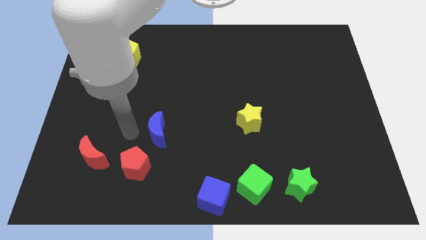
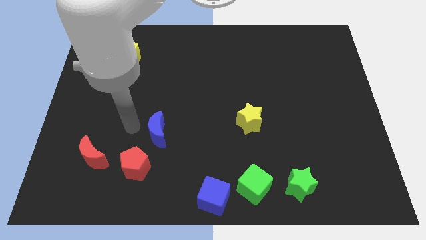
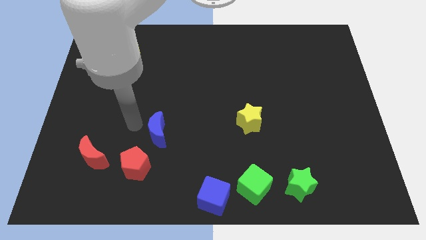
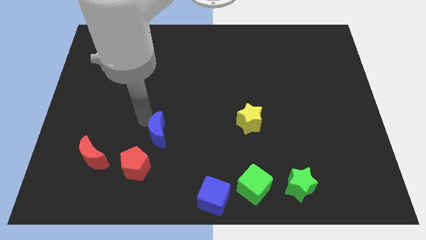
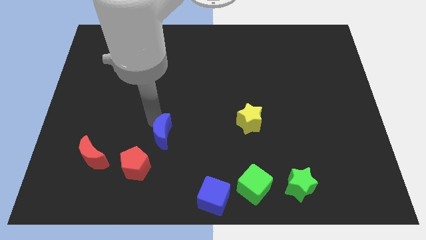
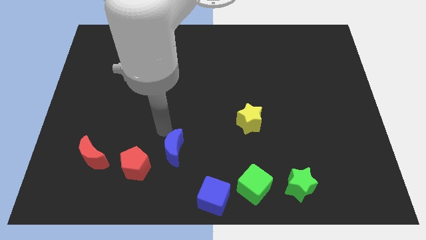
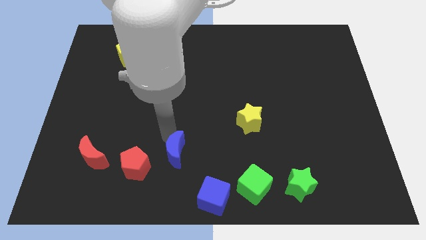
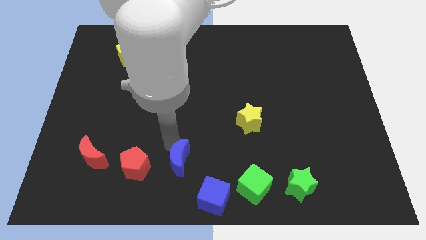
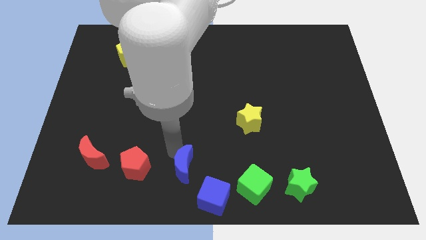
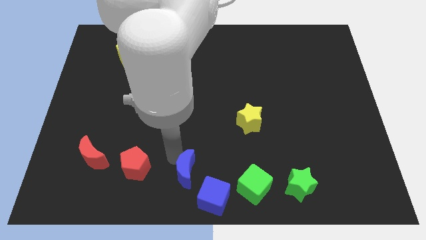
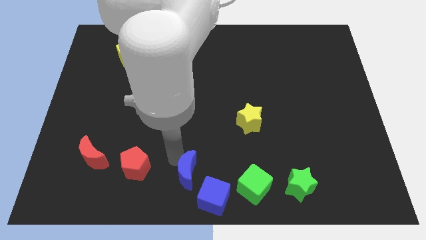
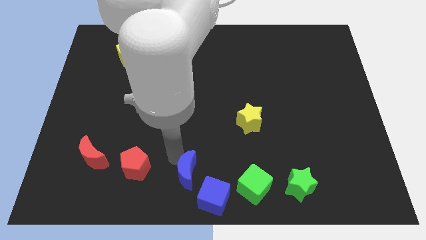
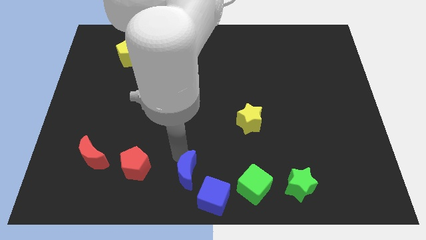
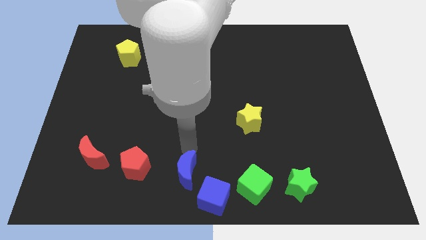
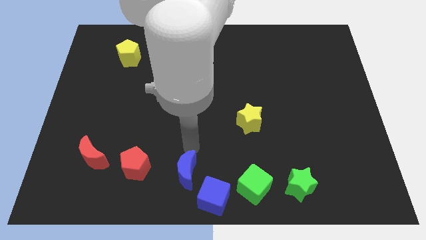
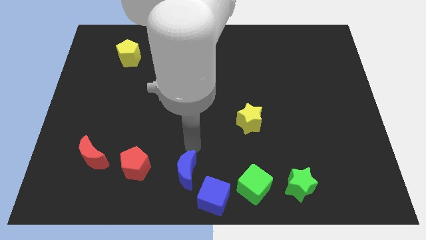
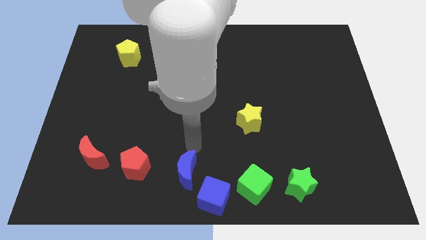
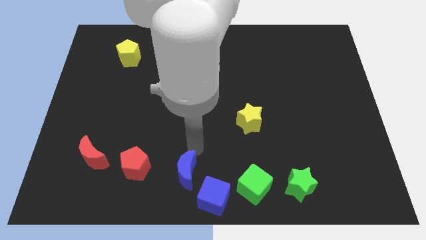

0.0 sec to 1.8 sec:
move the blue crescent near to the blue cube

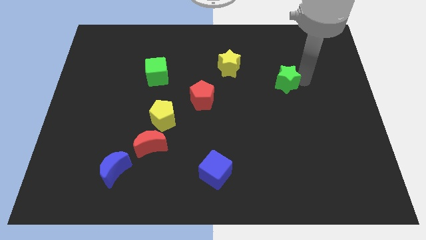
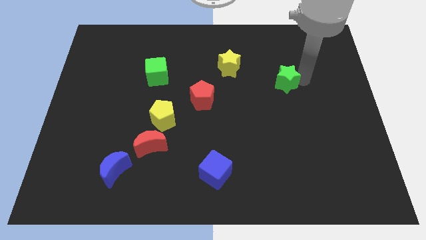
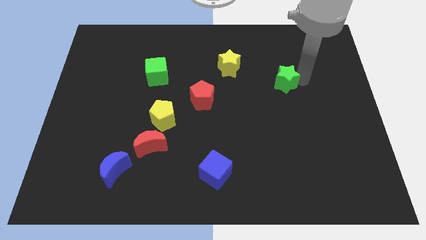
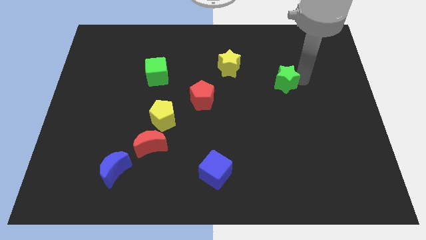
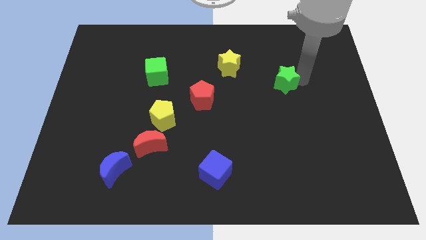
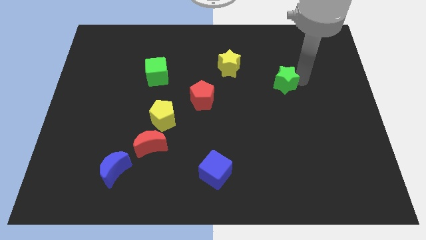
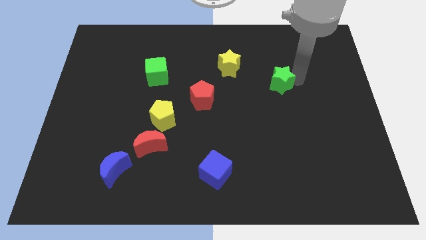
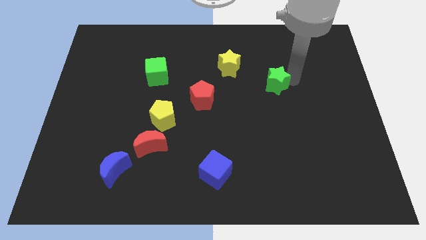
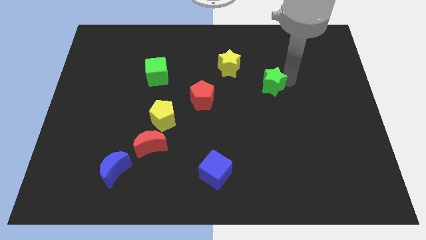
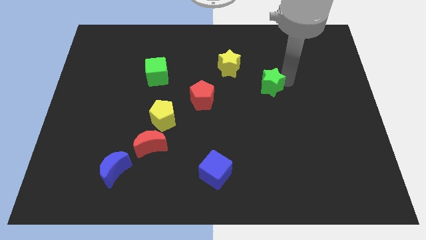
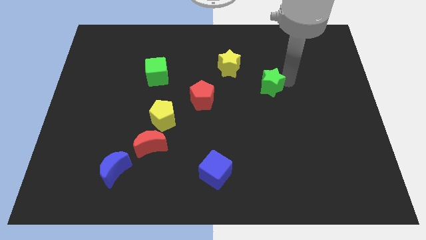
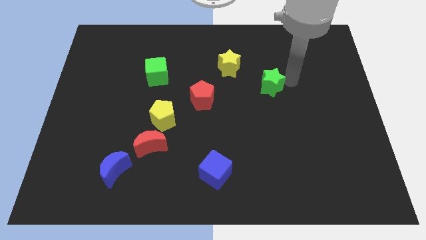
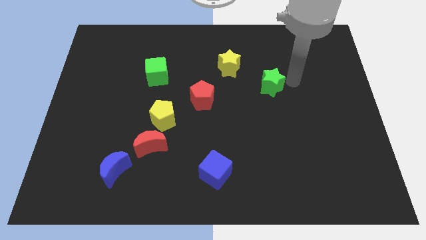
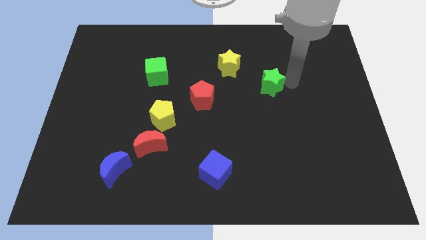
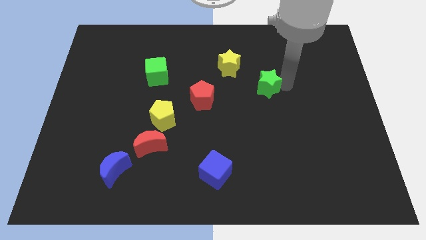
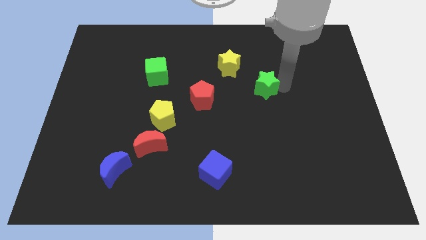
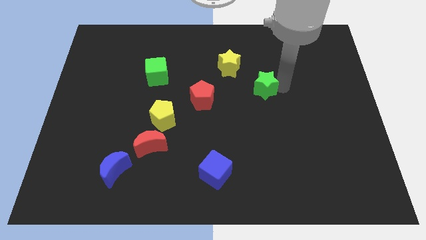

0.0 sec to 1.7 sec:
move the green star towards the right side of the yellow star

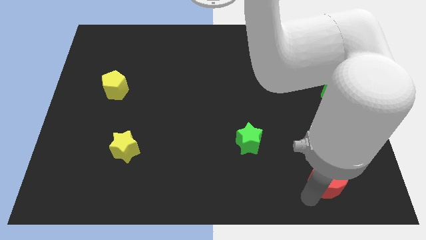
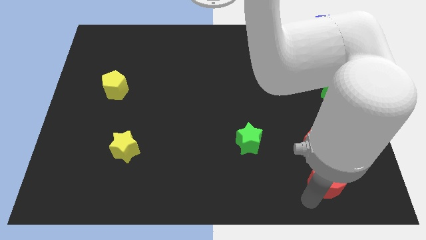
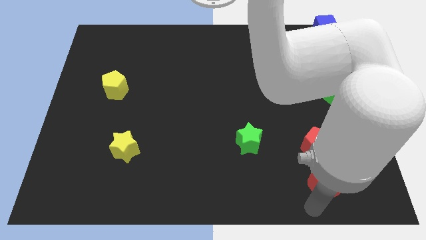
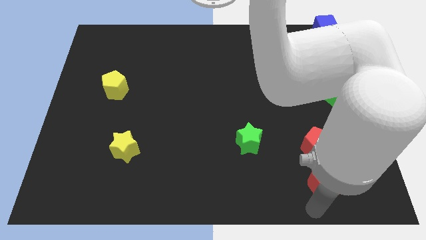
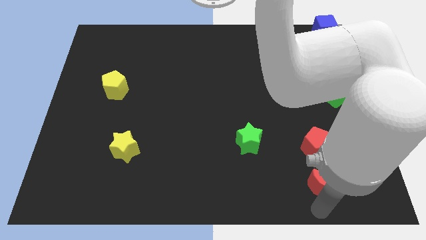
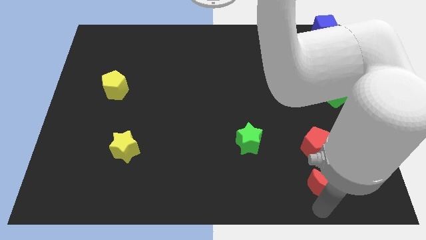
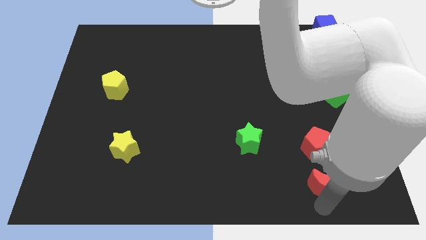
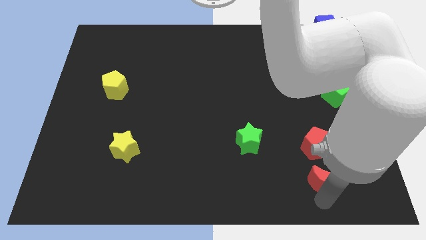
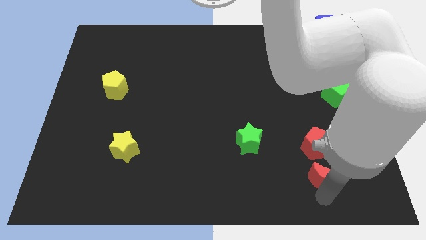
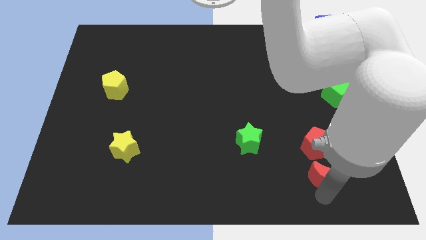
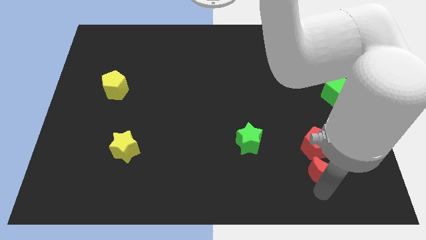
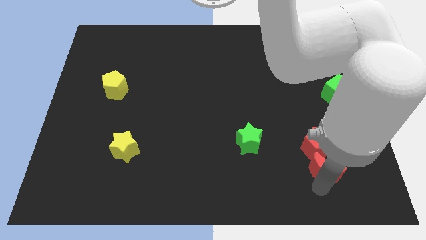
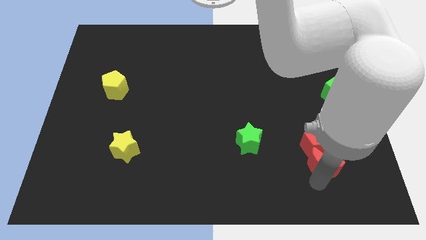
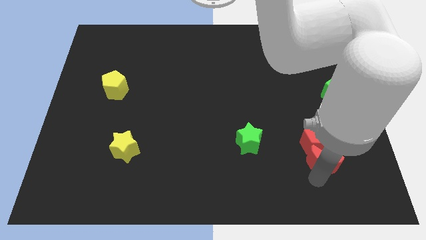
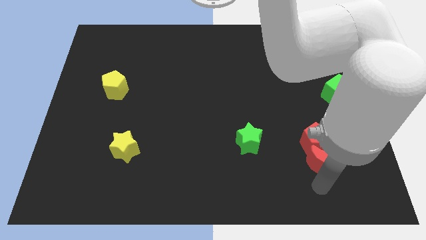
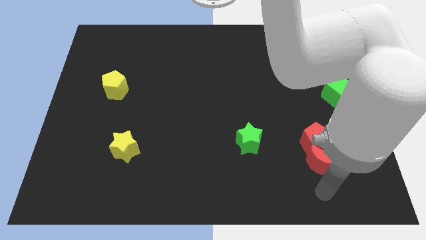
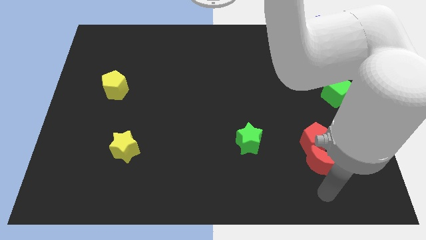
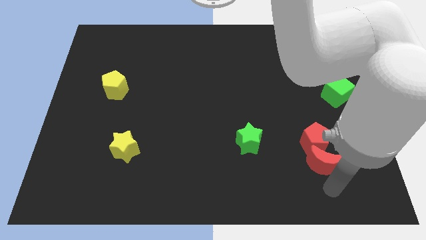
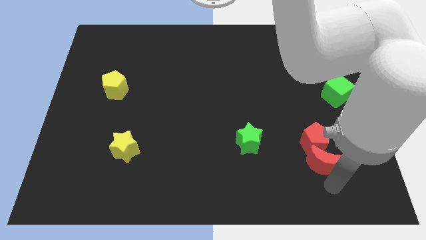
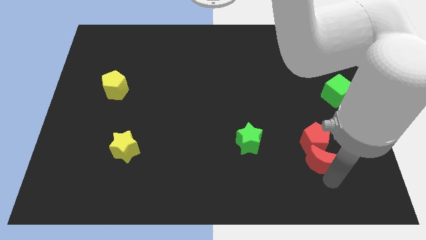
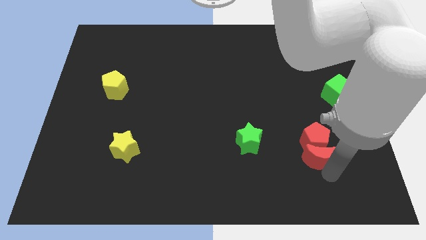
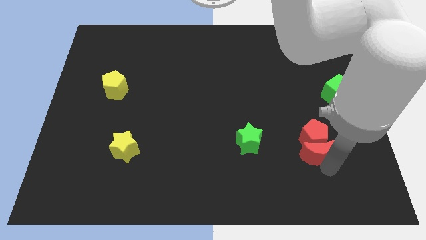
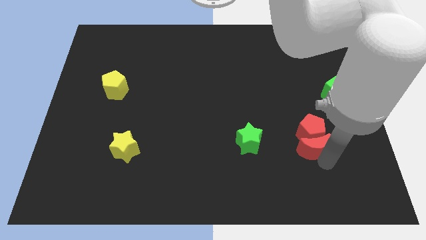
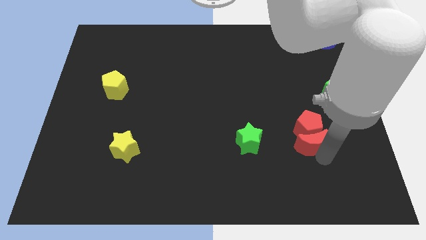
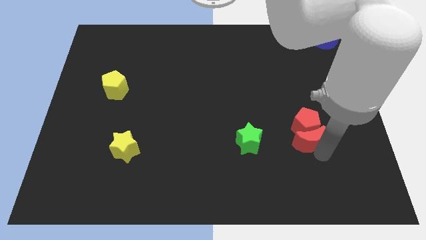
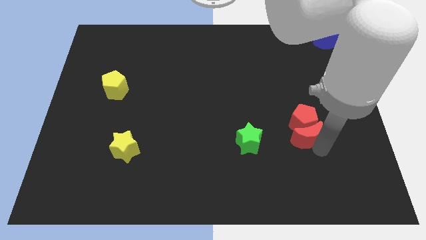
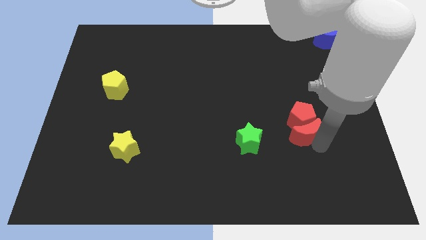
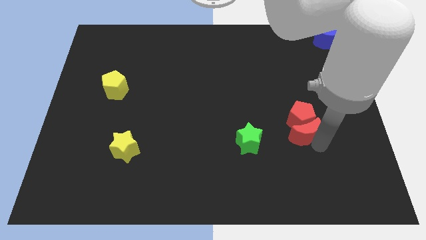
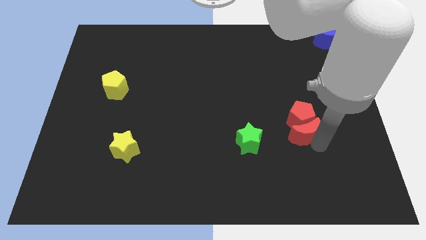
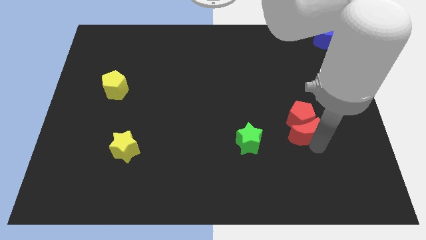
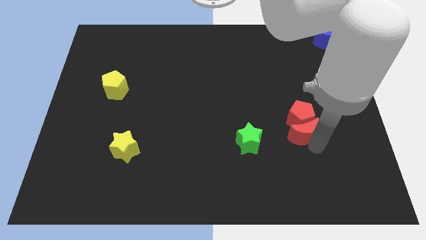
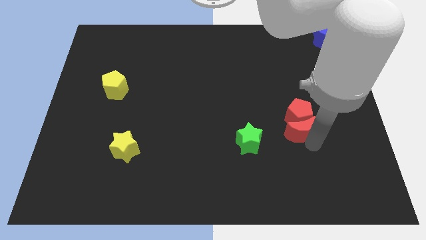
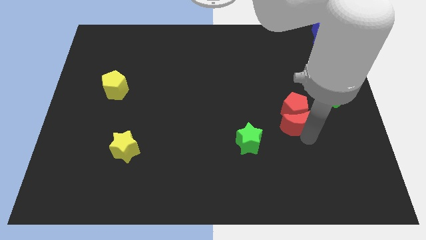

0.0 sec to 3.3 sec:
push red moon in to red pentagon

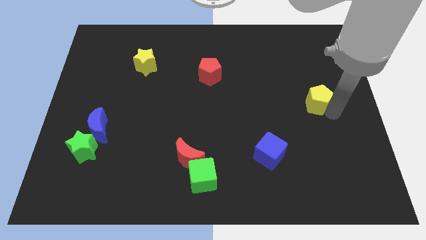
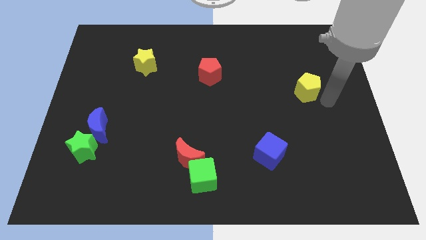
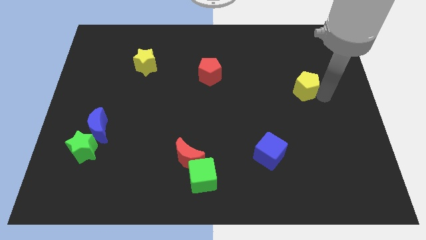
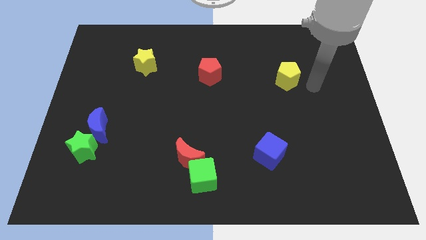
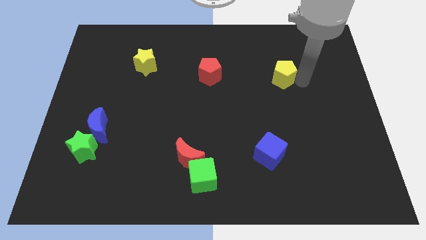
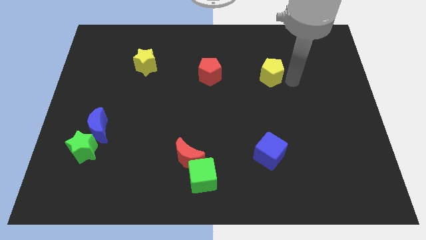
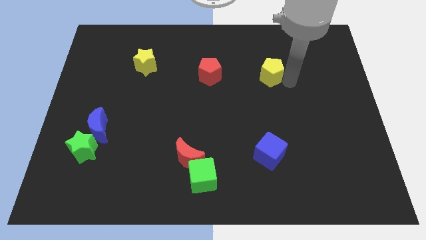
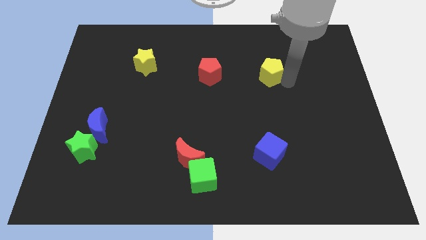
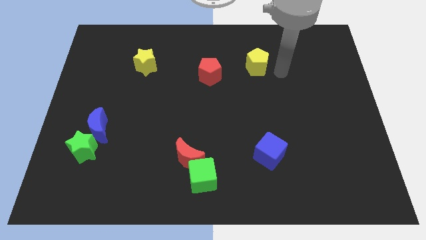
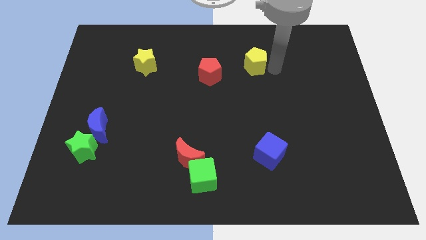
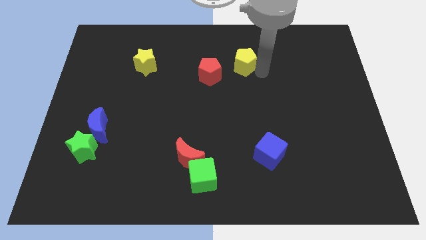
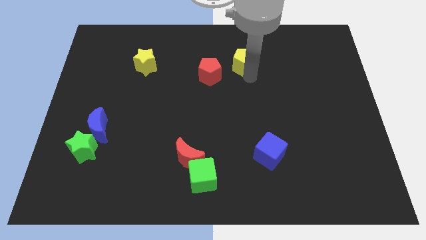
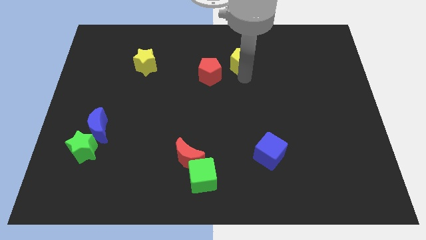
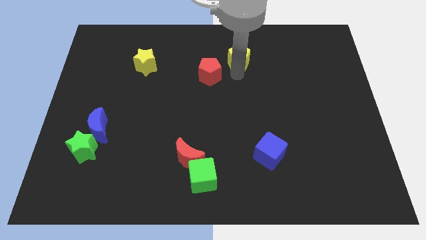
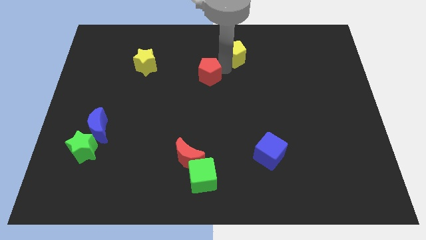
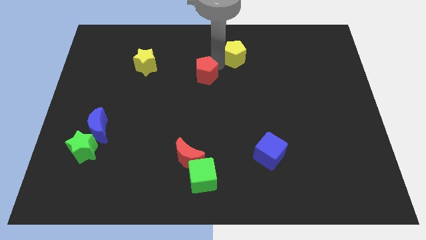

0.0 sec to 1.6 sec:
move the yellow pentagon to the top right of the red pentagon

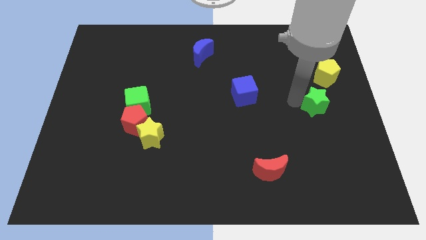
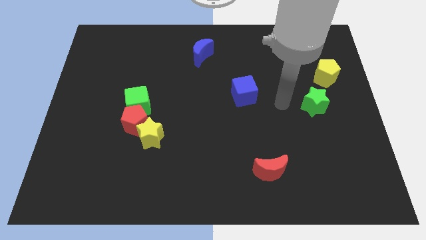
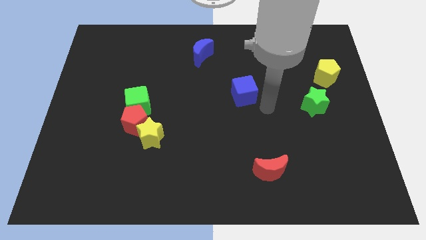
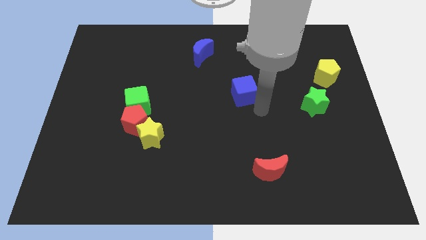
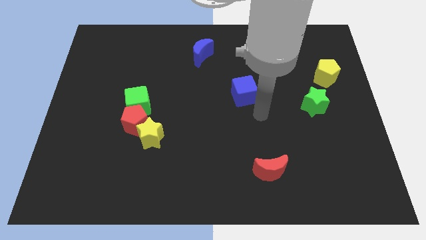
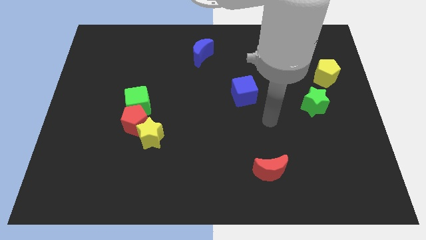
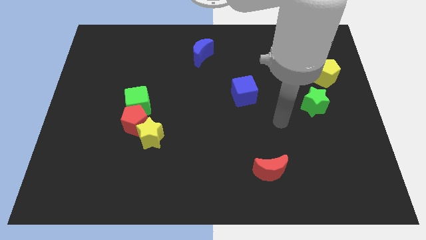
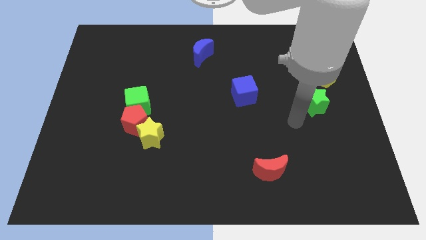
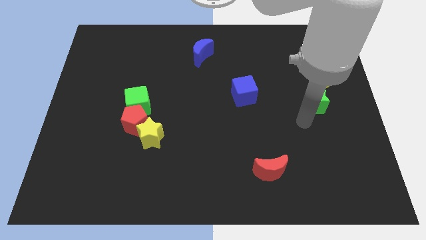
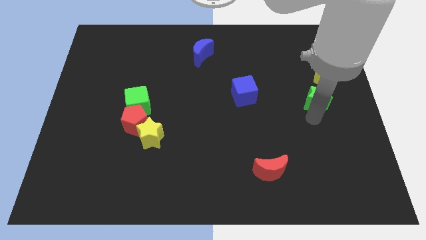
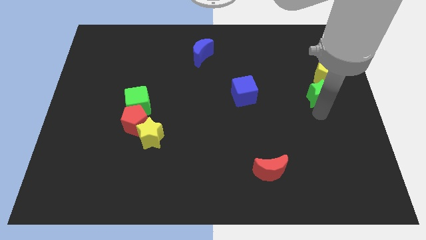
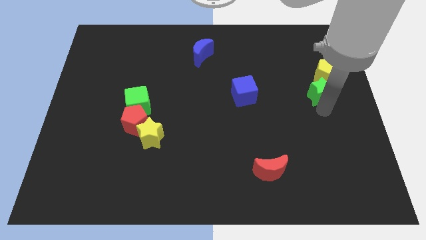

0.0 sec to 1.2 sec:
touch the bottom of green star
